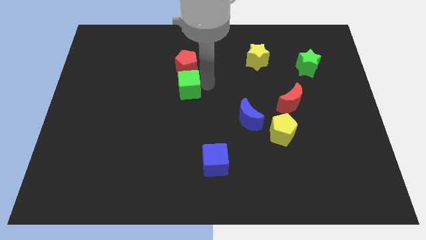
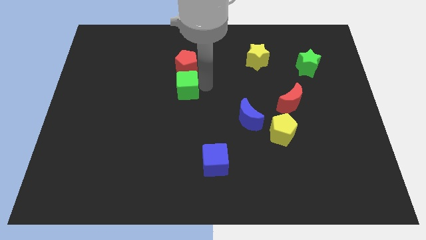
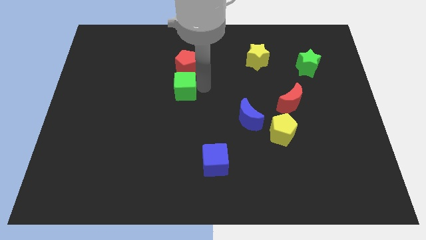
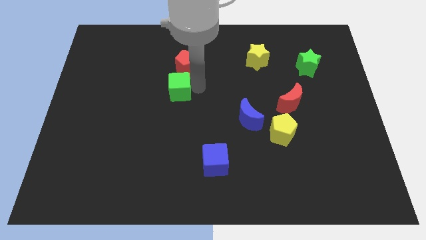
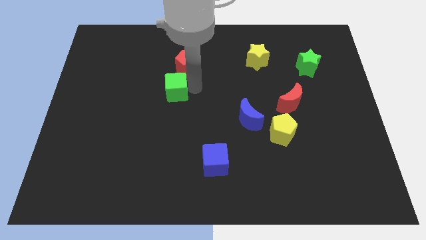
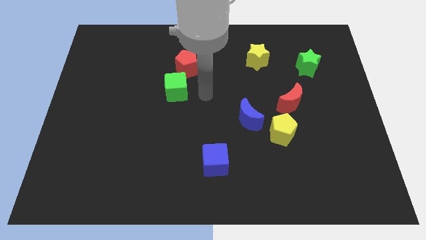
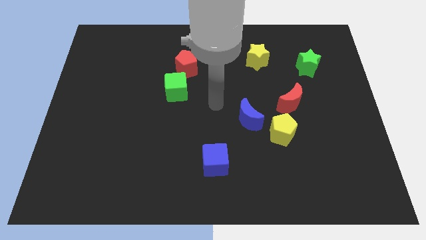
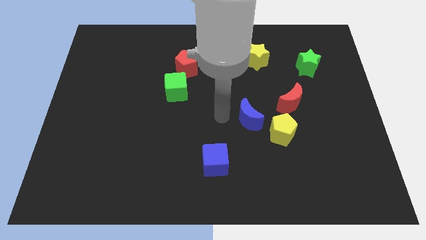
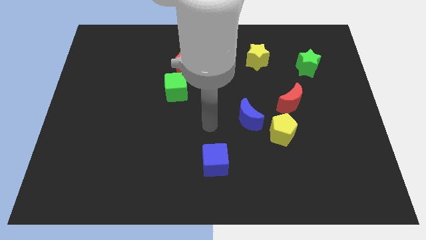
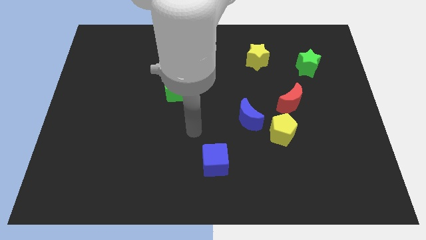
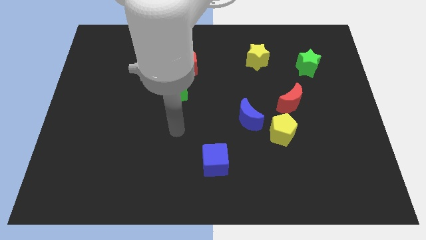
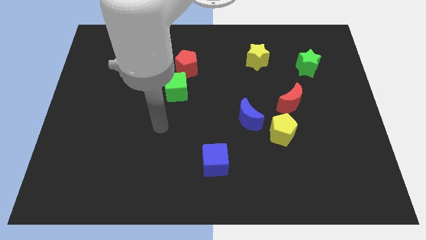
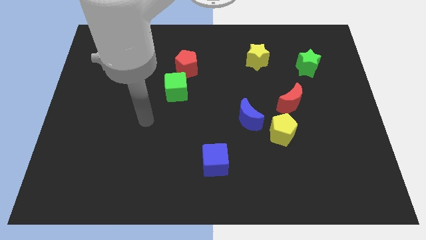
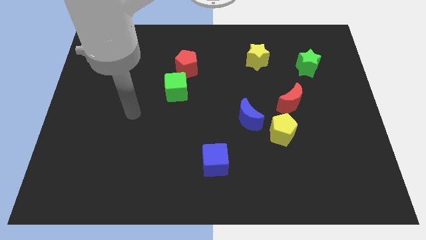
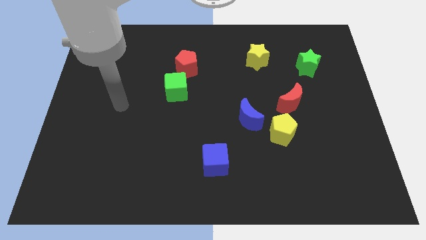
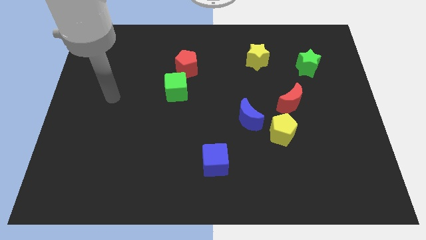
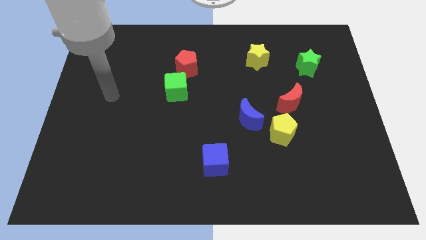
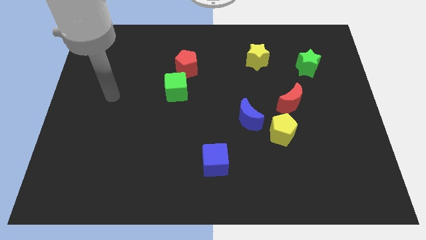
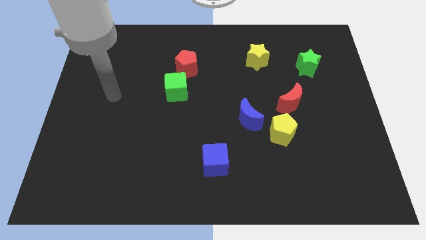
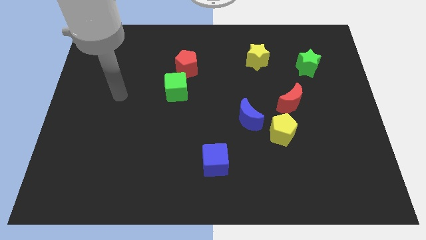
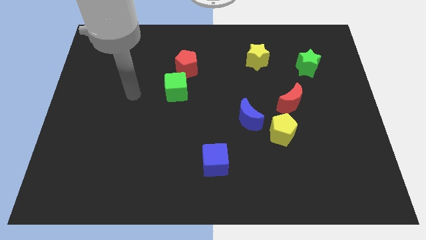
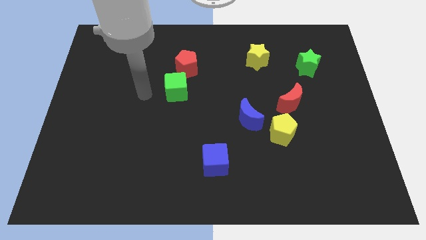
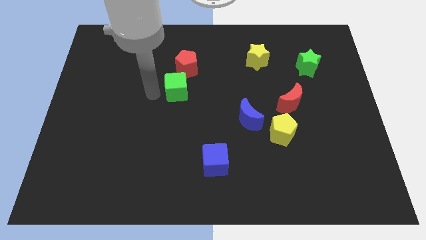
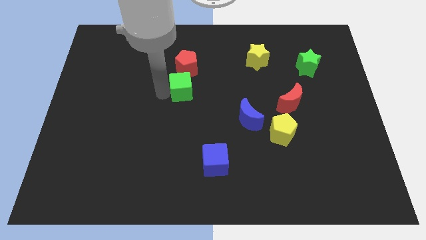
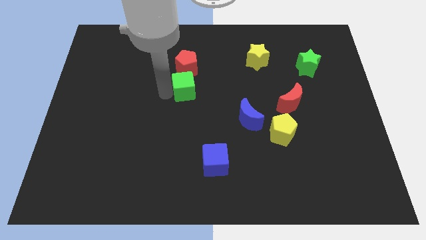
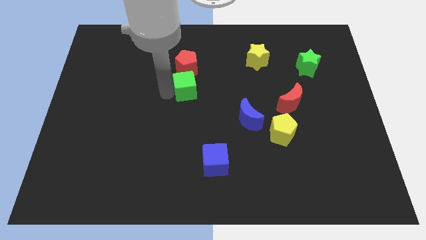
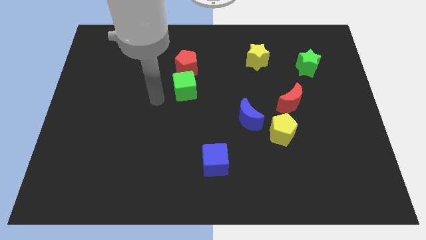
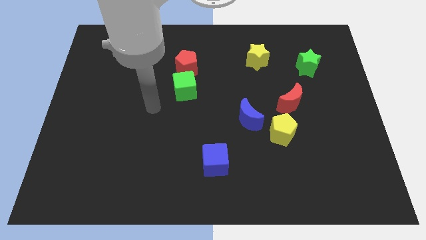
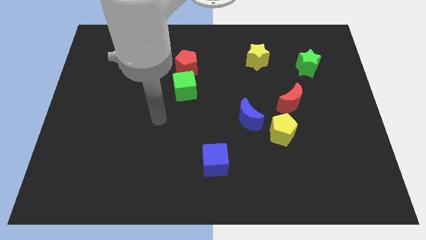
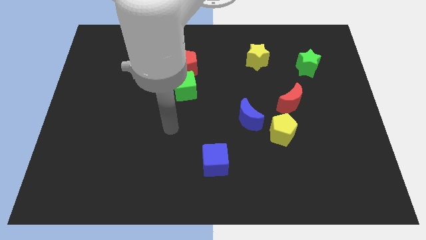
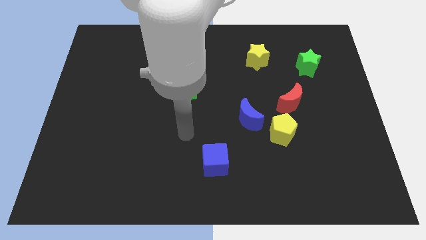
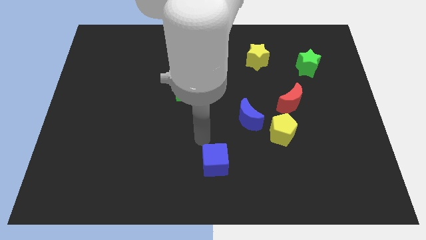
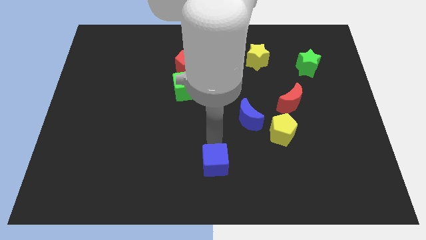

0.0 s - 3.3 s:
slightly move green cube towards its right

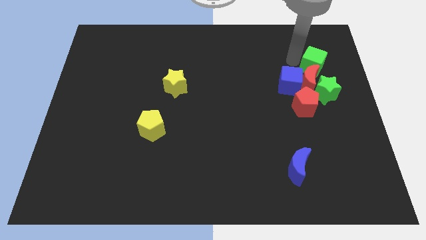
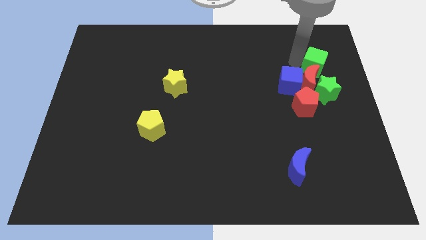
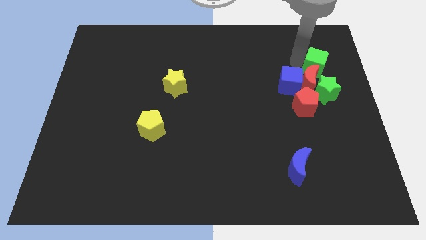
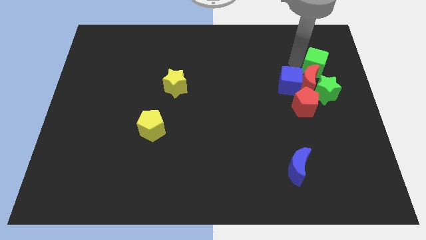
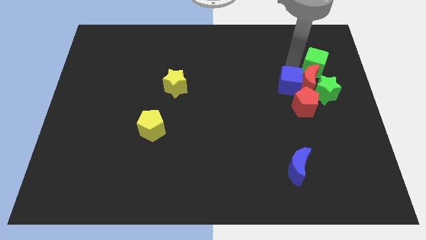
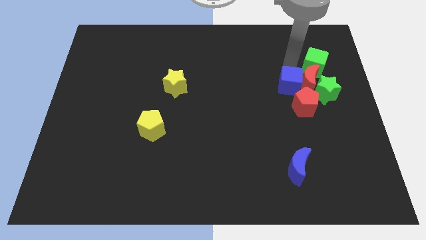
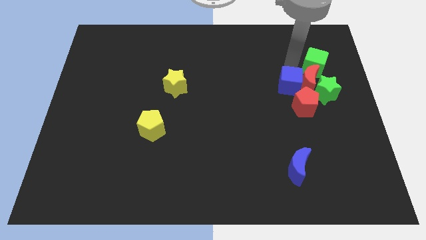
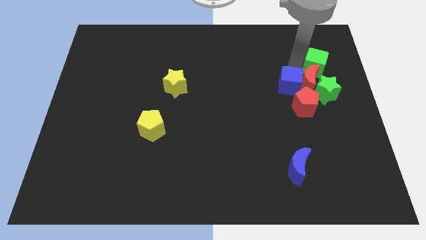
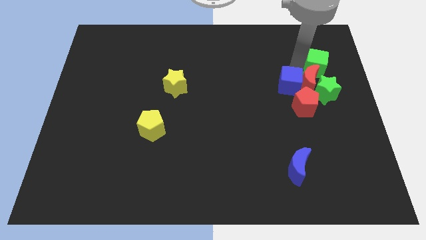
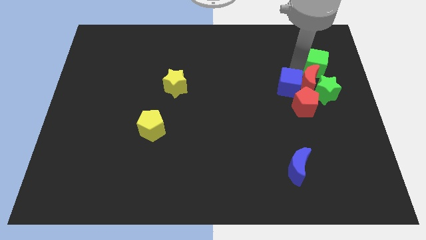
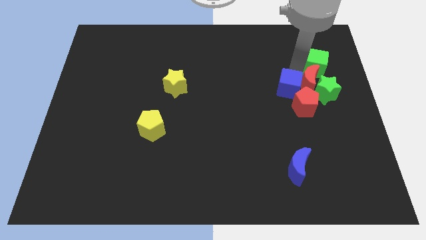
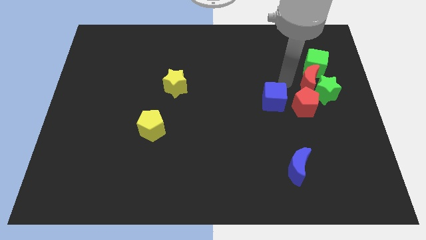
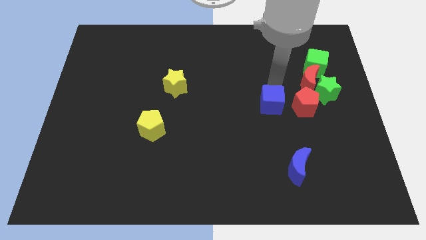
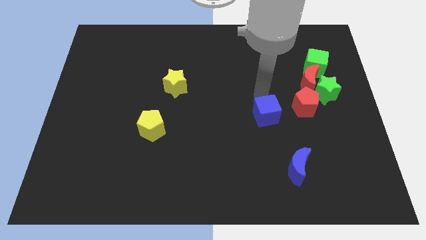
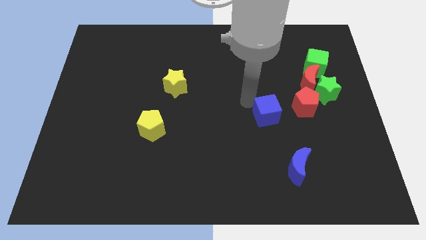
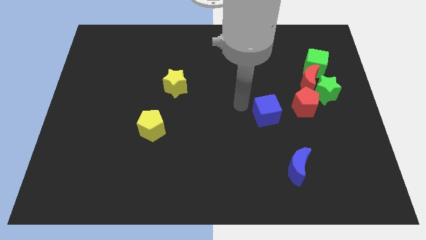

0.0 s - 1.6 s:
separate blue cube from red moon

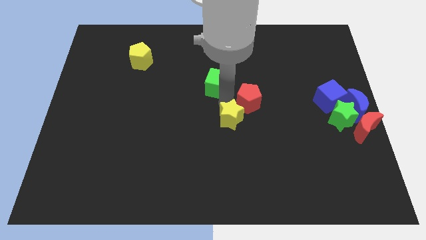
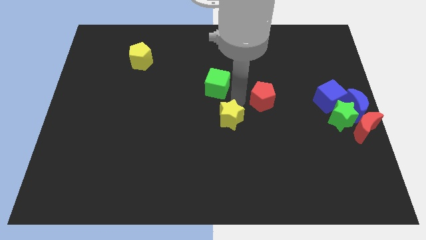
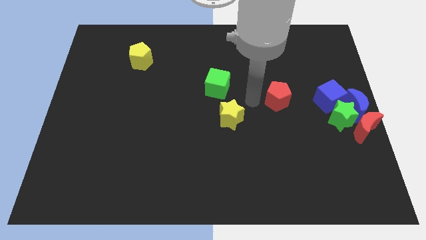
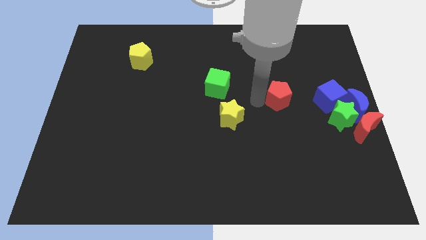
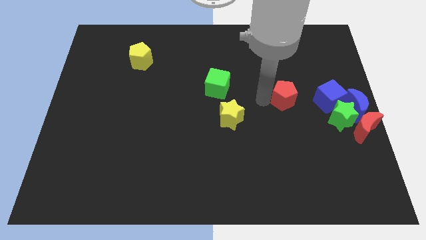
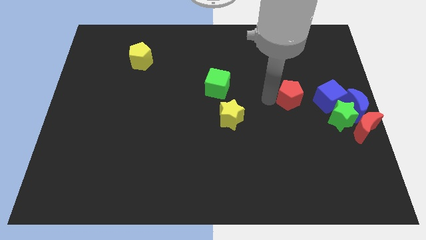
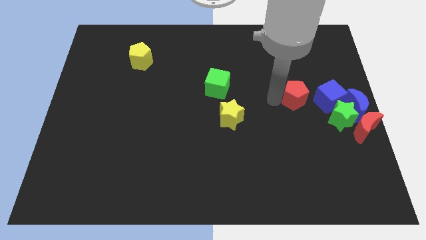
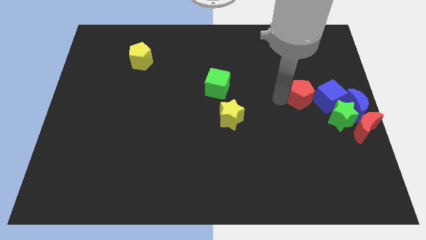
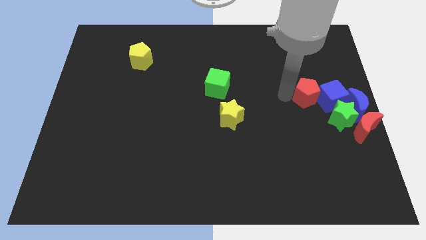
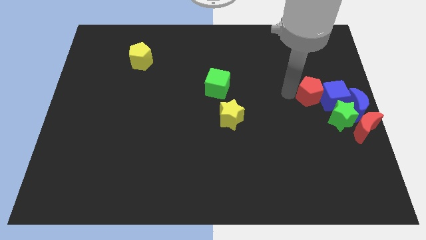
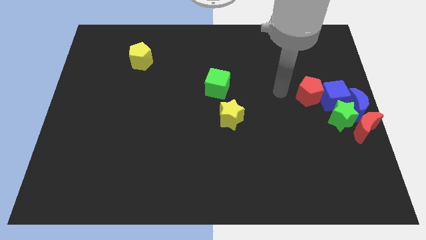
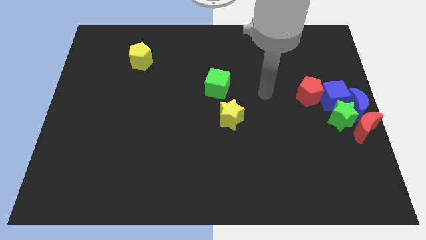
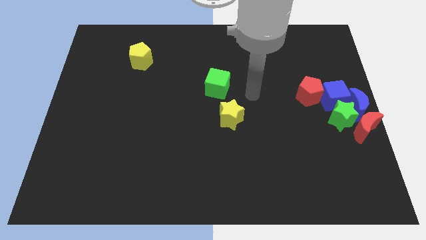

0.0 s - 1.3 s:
push the red pentagon closer to the left of the blue cube

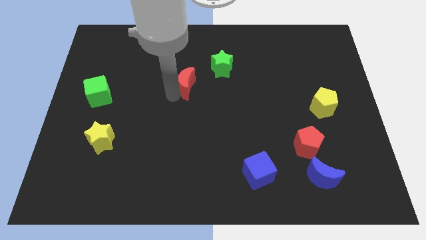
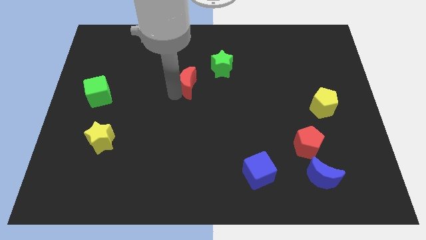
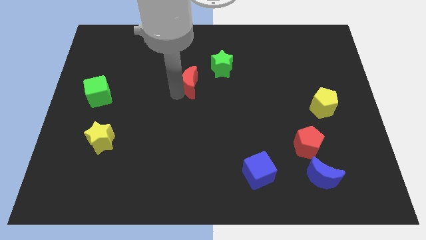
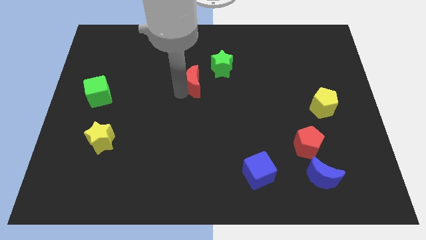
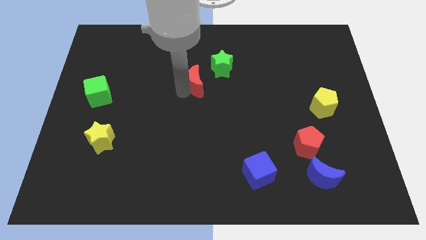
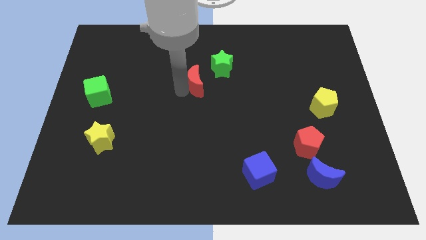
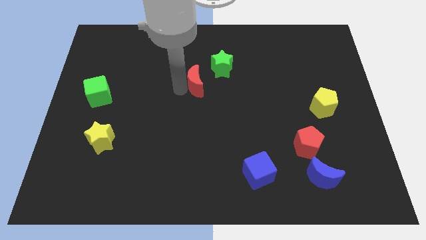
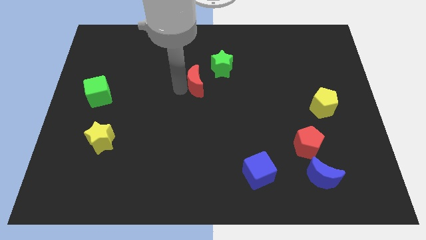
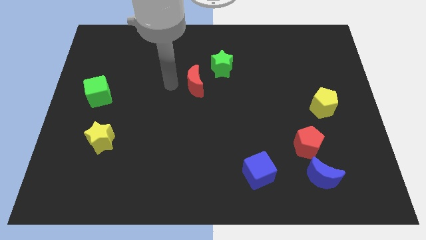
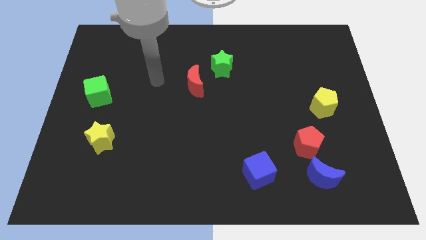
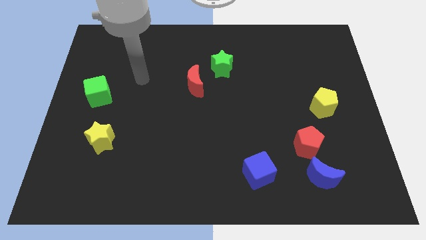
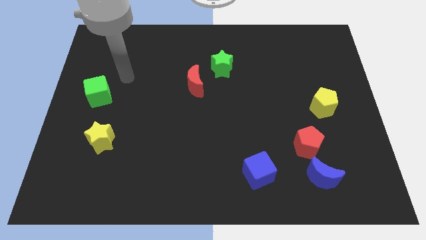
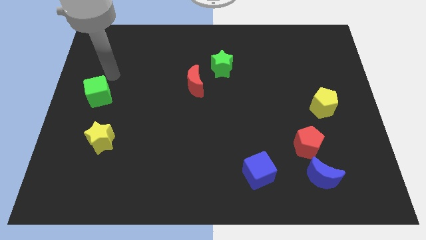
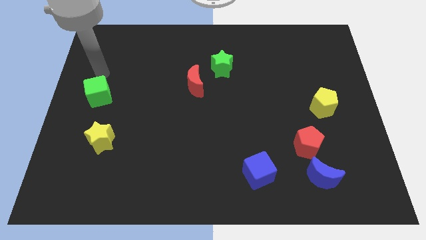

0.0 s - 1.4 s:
point your arm at the top of the green cube

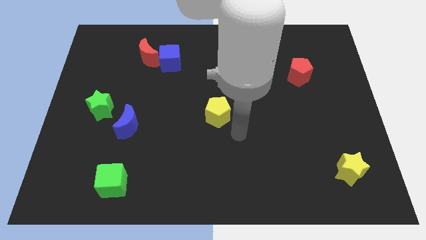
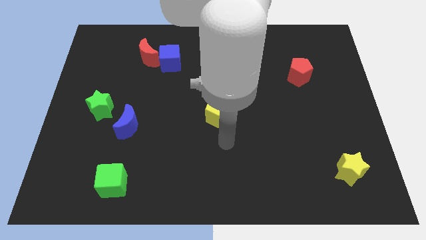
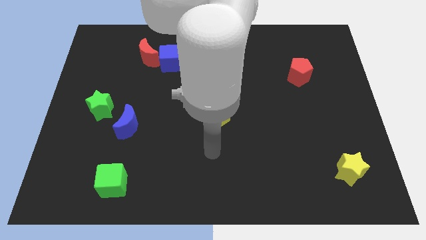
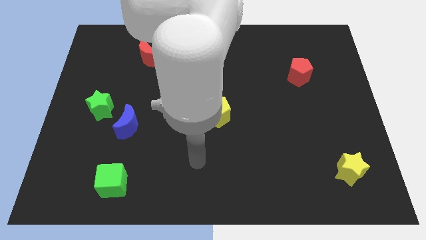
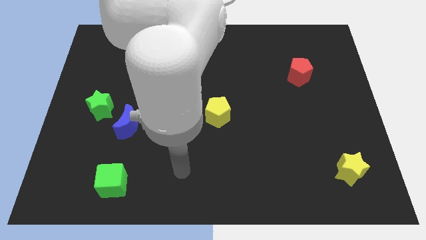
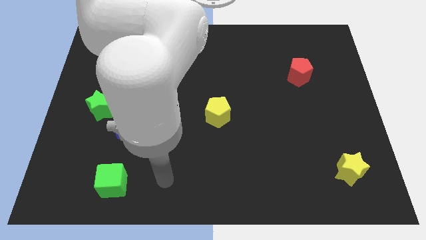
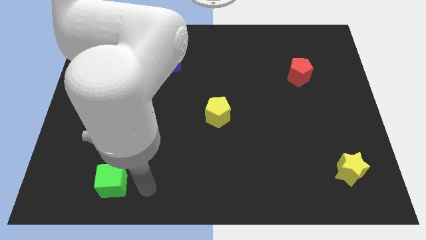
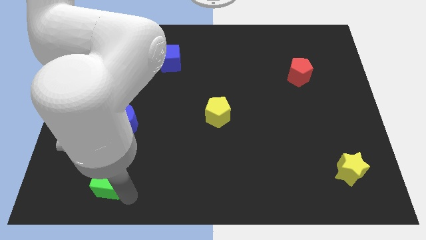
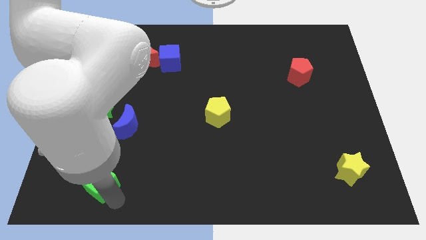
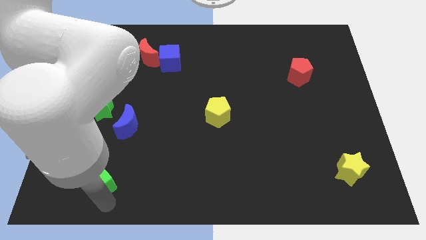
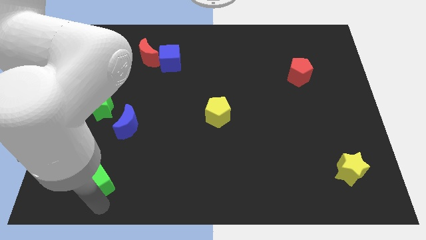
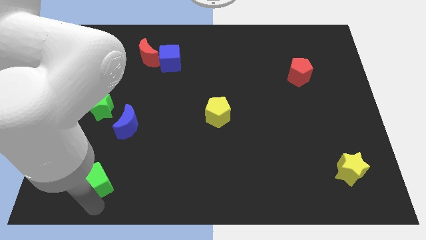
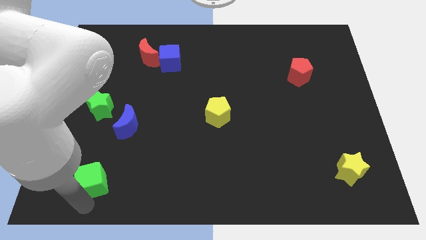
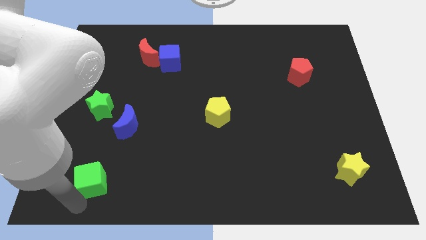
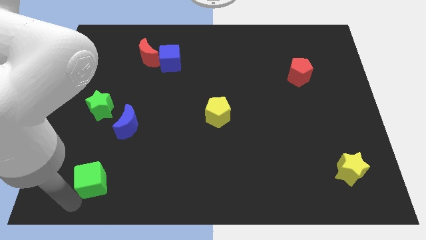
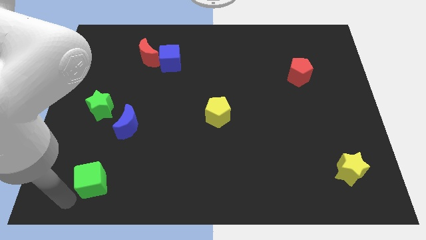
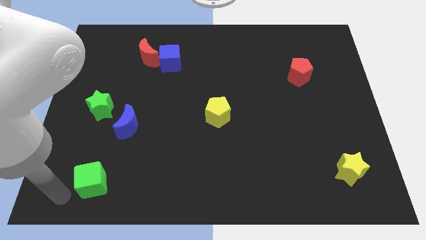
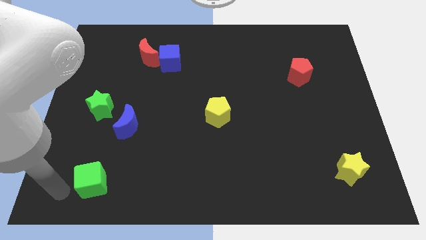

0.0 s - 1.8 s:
move the green cube below the green star
